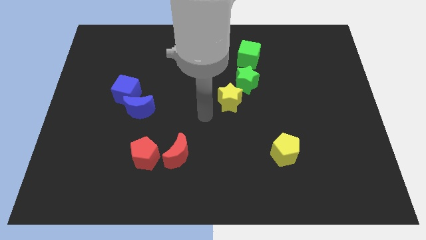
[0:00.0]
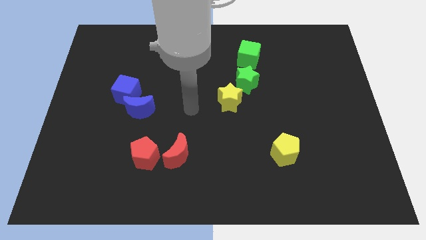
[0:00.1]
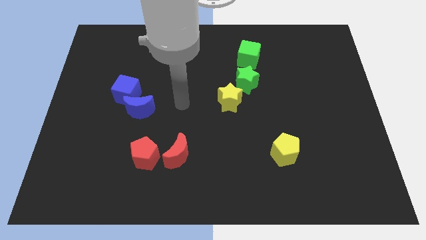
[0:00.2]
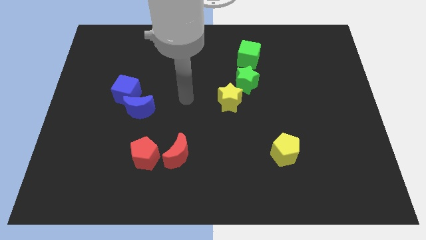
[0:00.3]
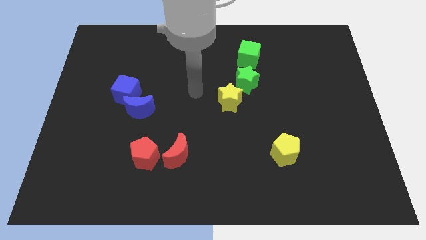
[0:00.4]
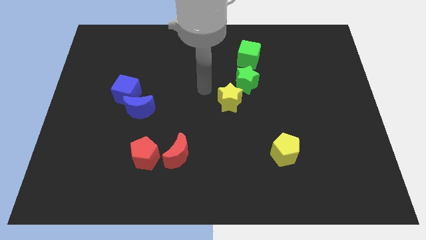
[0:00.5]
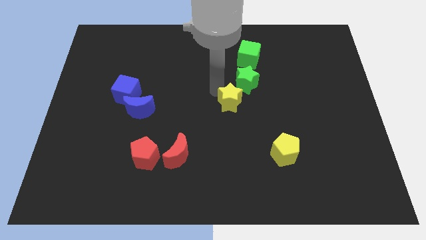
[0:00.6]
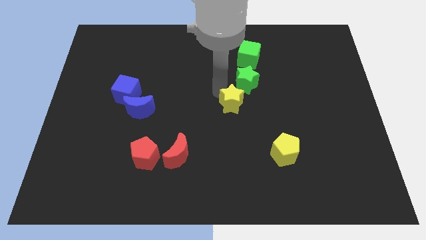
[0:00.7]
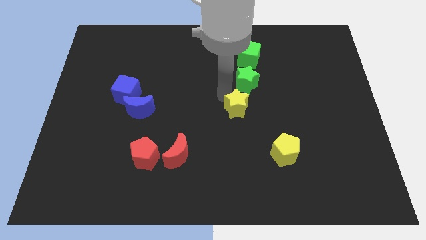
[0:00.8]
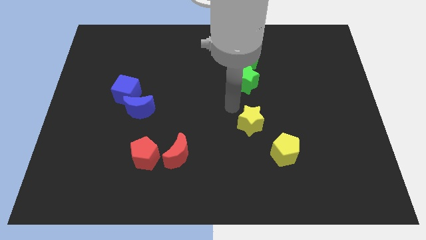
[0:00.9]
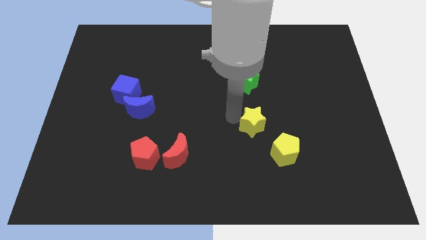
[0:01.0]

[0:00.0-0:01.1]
push the yellow star towards the yellow pentagon

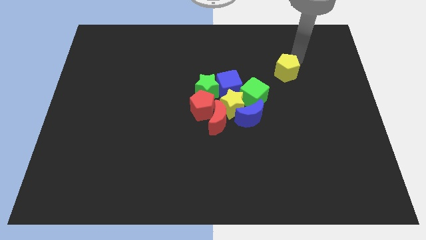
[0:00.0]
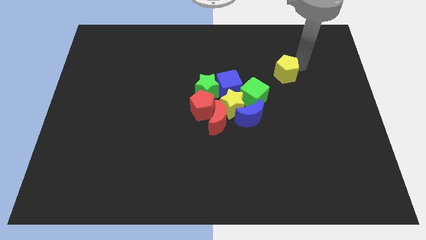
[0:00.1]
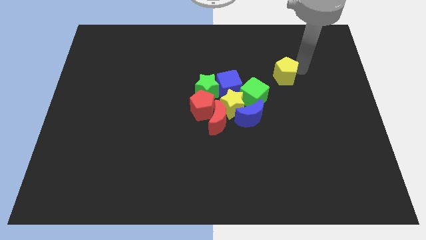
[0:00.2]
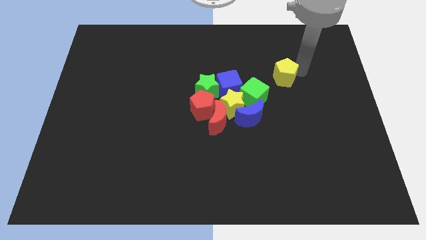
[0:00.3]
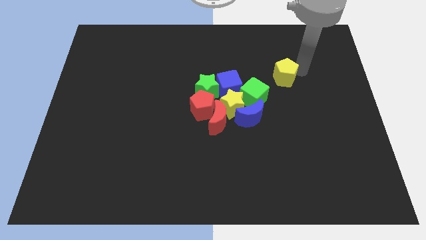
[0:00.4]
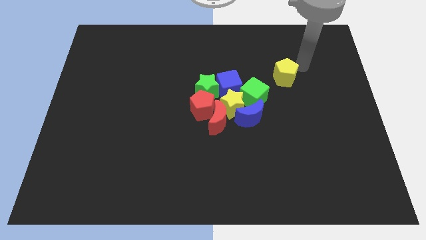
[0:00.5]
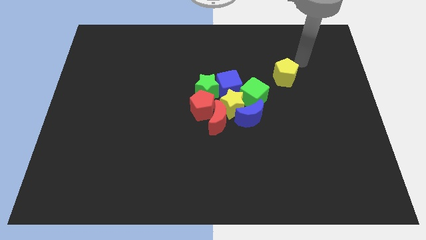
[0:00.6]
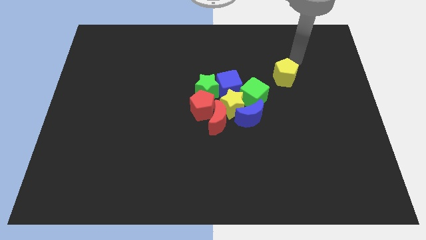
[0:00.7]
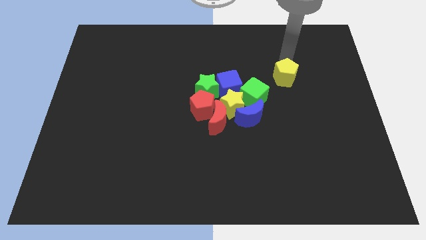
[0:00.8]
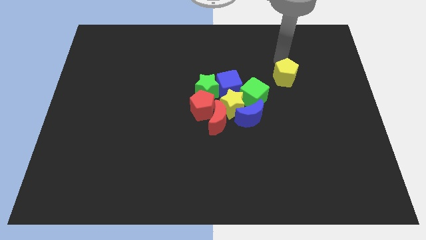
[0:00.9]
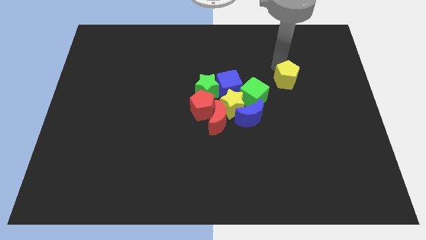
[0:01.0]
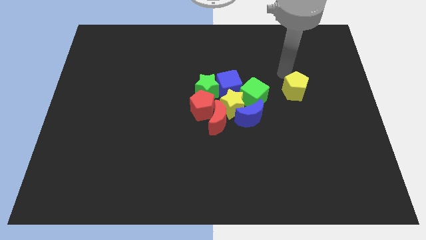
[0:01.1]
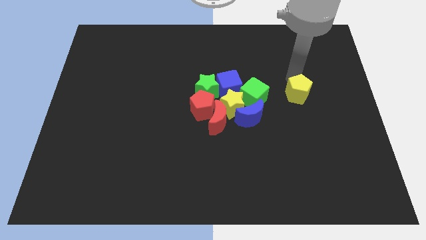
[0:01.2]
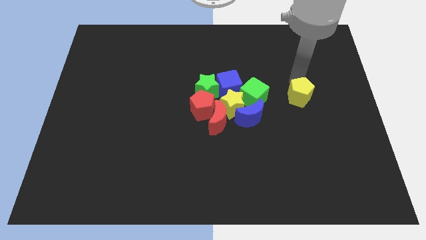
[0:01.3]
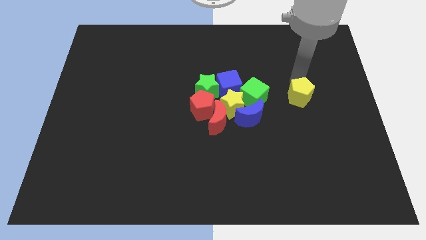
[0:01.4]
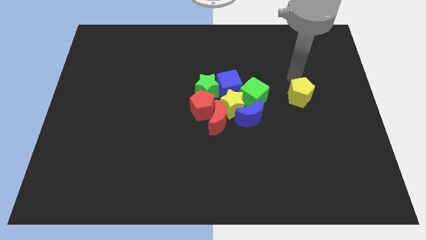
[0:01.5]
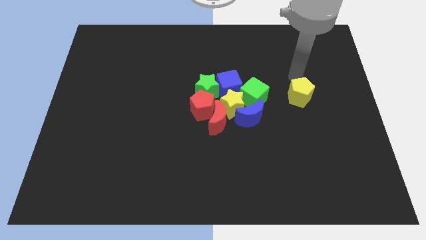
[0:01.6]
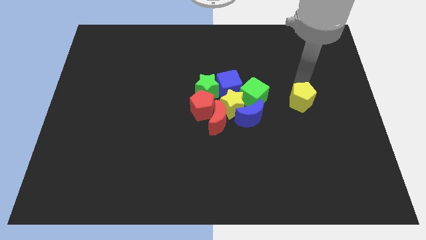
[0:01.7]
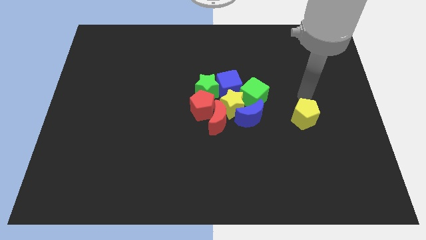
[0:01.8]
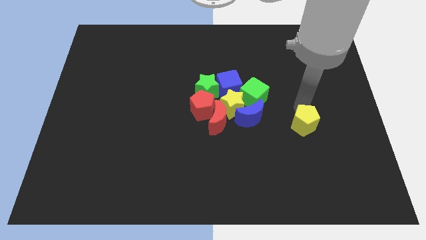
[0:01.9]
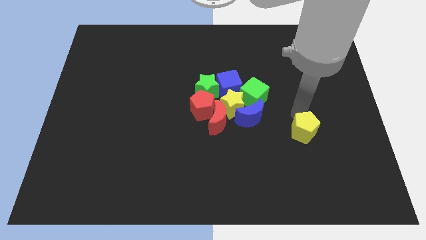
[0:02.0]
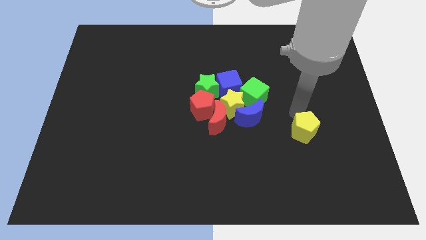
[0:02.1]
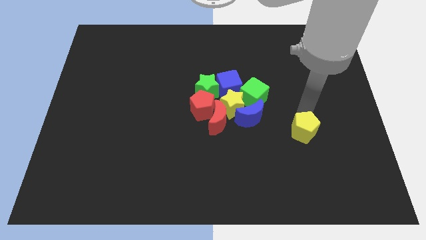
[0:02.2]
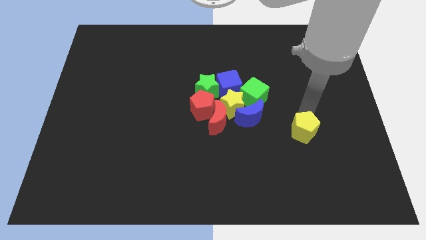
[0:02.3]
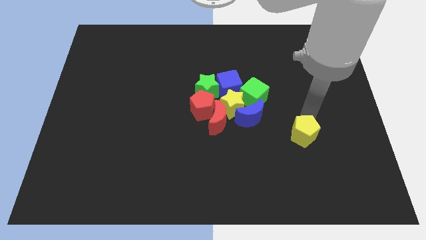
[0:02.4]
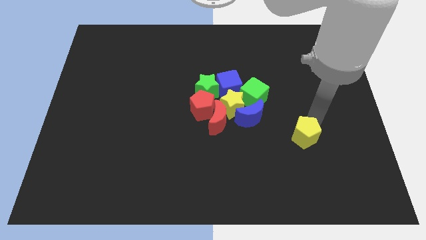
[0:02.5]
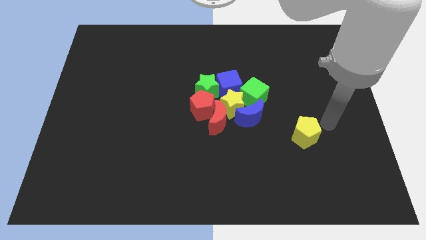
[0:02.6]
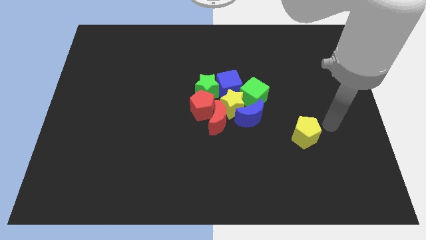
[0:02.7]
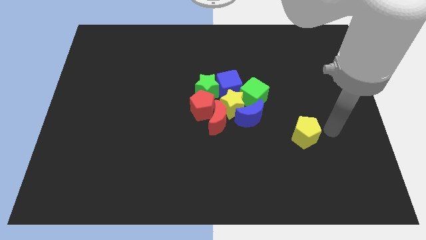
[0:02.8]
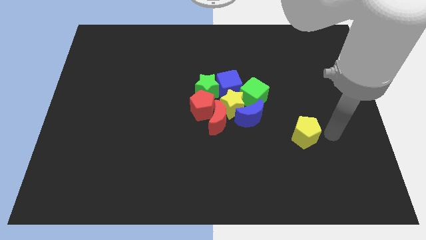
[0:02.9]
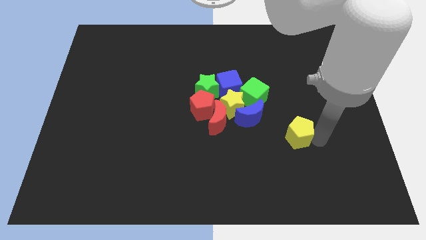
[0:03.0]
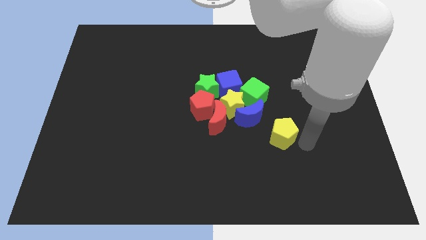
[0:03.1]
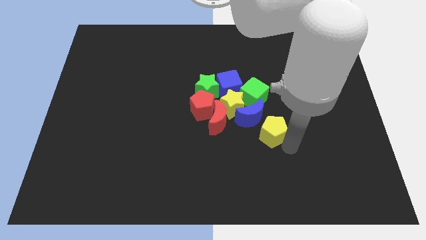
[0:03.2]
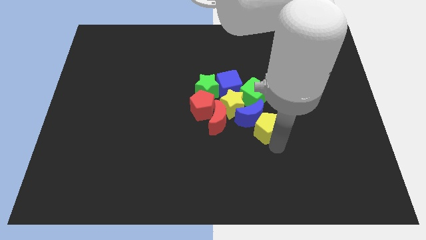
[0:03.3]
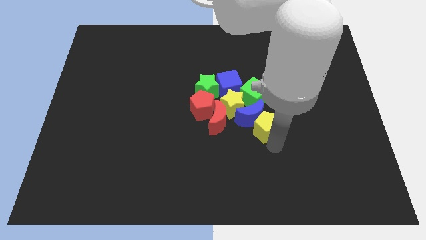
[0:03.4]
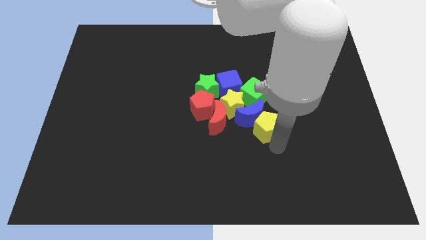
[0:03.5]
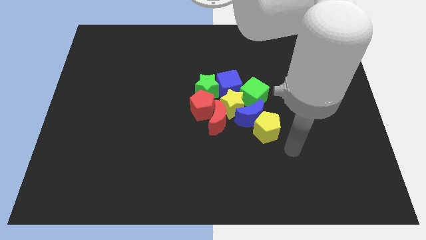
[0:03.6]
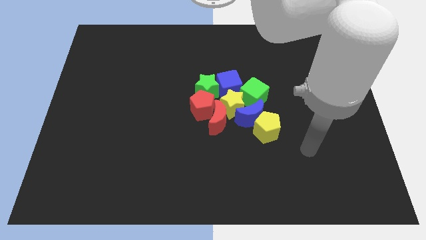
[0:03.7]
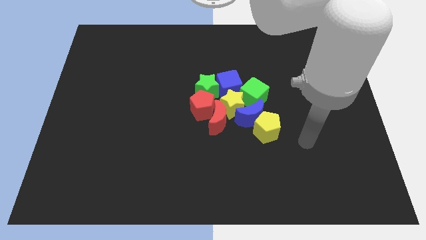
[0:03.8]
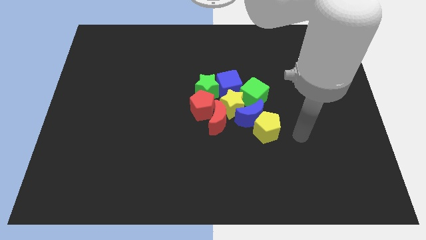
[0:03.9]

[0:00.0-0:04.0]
move the yellow pentagon below the blue moon

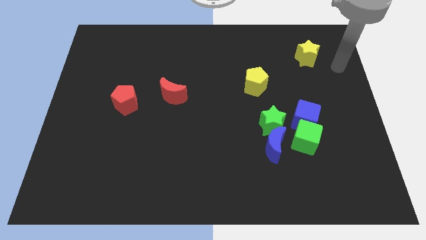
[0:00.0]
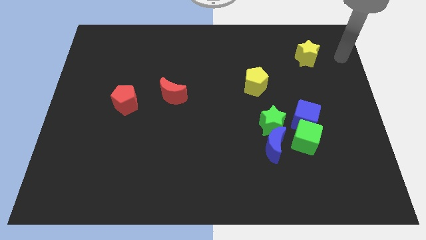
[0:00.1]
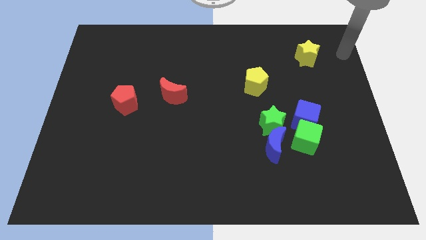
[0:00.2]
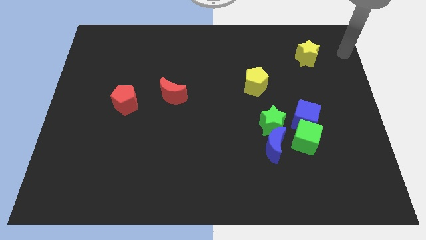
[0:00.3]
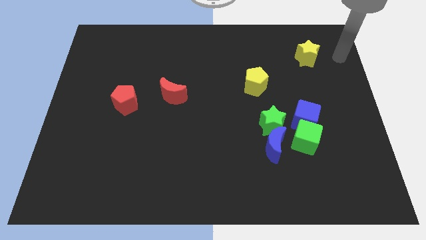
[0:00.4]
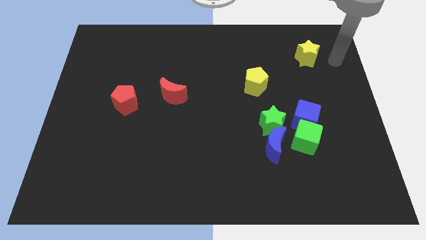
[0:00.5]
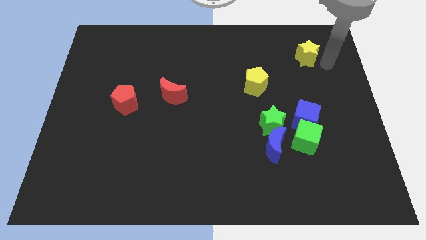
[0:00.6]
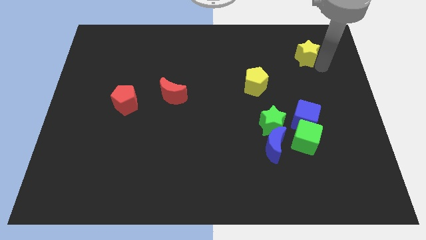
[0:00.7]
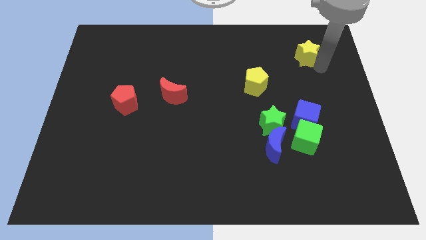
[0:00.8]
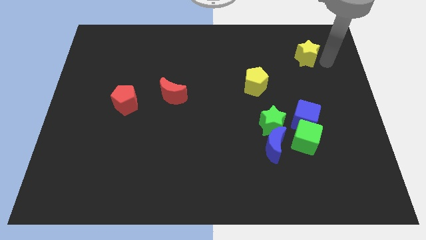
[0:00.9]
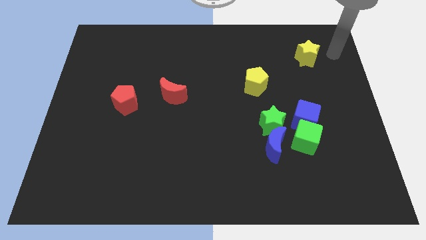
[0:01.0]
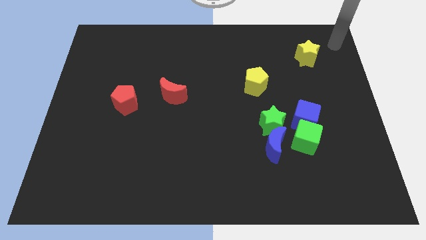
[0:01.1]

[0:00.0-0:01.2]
put your arm to the right of the yellow star

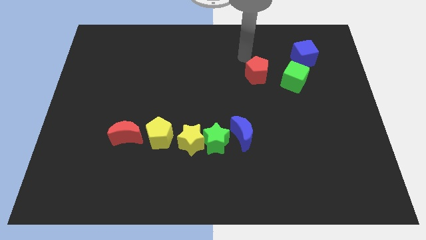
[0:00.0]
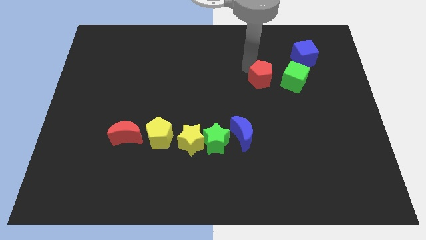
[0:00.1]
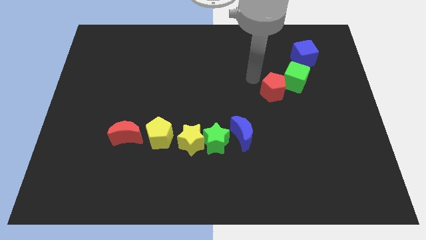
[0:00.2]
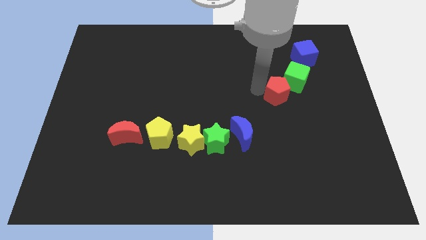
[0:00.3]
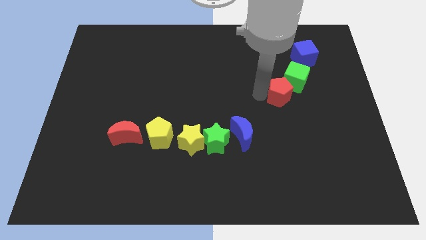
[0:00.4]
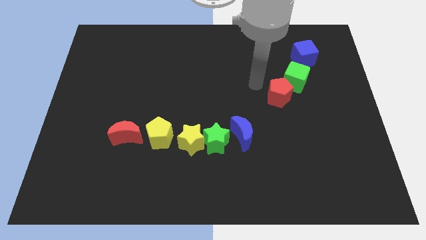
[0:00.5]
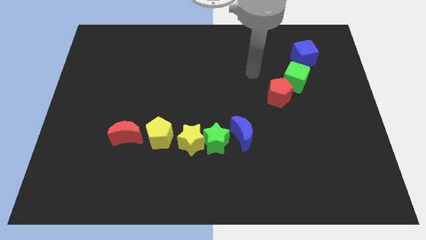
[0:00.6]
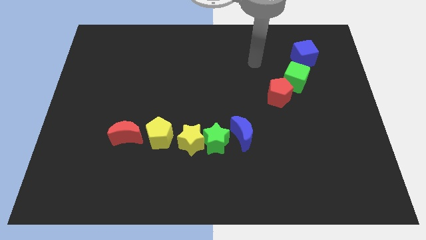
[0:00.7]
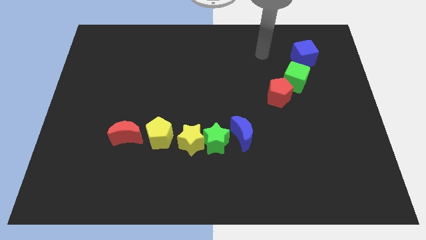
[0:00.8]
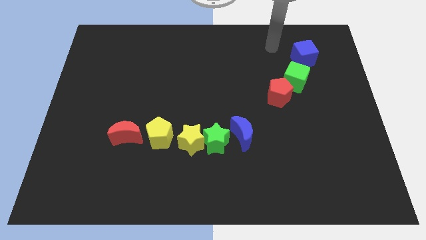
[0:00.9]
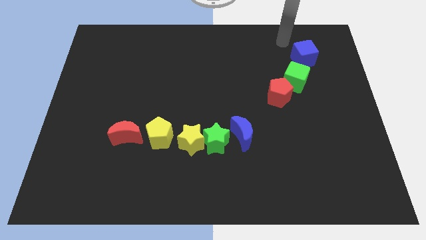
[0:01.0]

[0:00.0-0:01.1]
push the red pentagon to the bottom left of the green cube

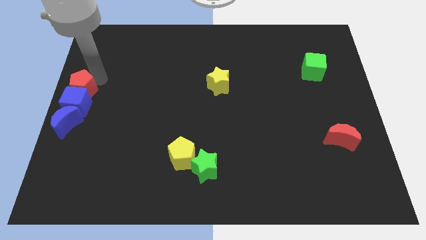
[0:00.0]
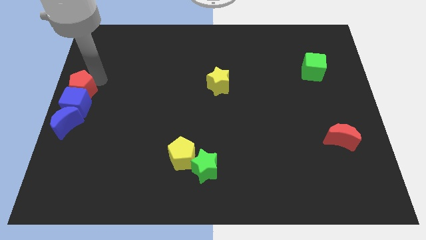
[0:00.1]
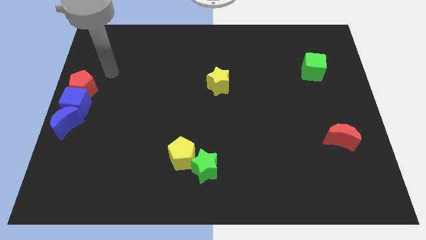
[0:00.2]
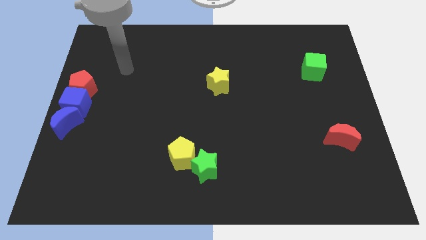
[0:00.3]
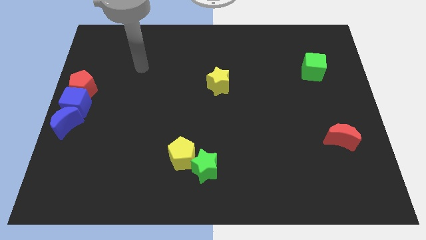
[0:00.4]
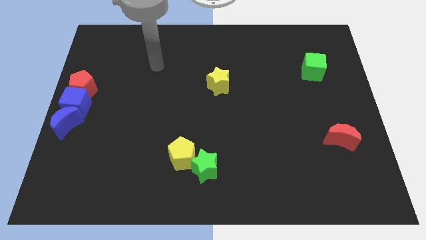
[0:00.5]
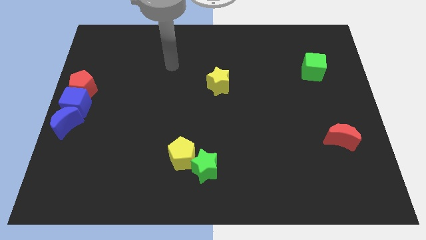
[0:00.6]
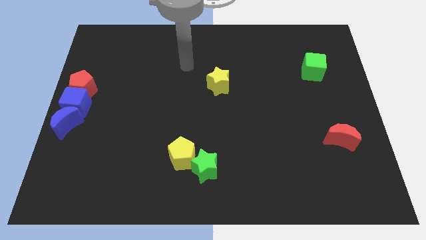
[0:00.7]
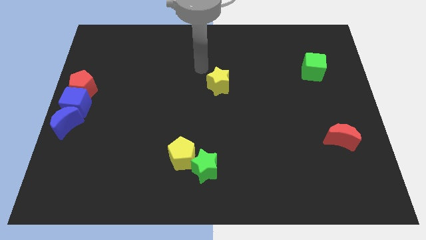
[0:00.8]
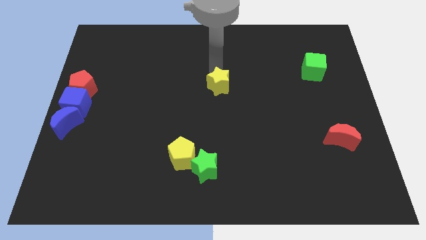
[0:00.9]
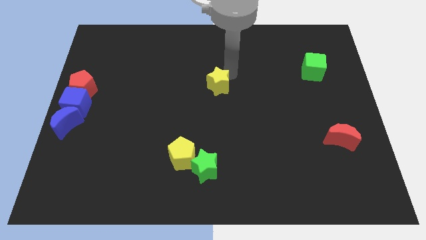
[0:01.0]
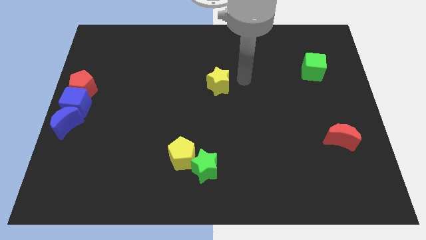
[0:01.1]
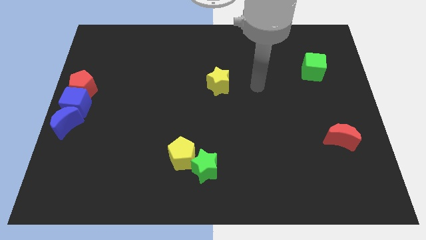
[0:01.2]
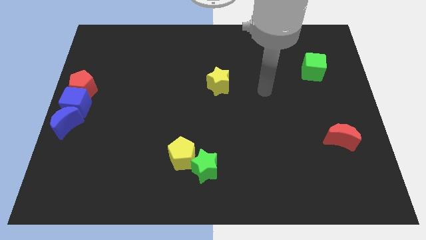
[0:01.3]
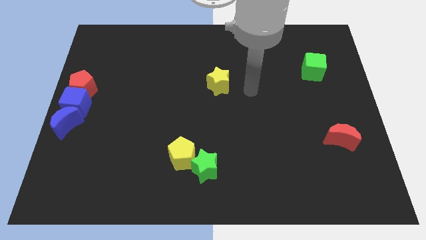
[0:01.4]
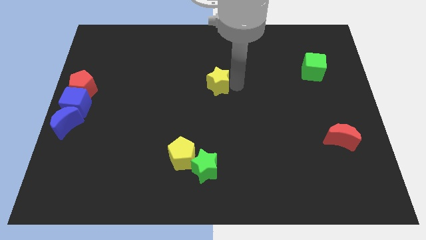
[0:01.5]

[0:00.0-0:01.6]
move yourself to the right side of the yellow star
